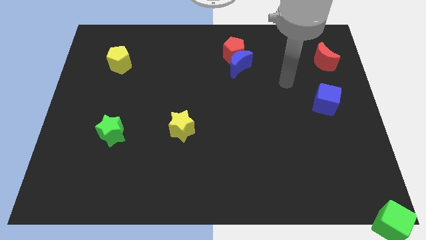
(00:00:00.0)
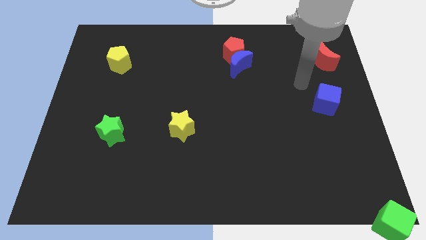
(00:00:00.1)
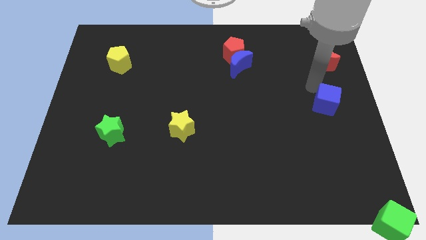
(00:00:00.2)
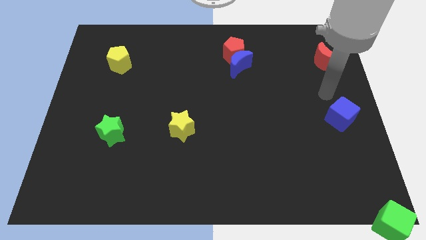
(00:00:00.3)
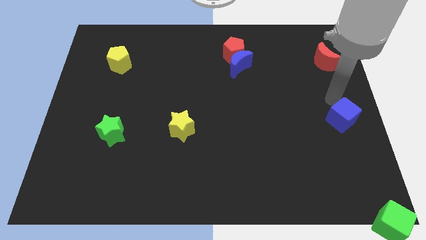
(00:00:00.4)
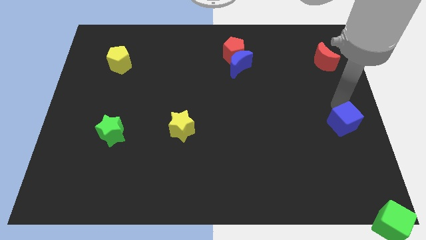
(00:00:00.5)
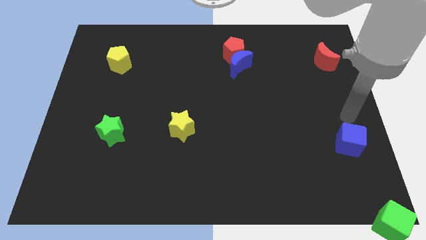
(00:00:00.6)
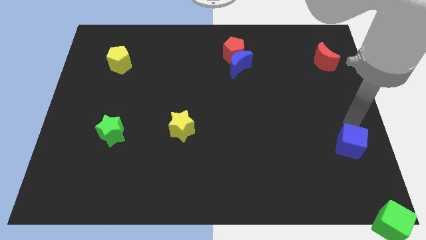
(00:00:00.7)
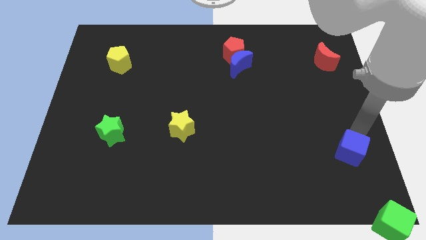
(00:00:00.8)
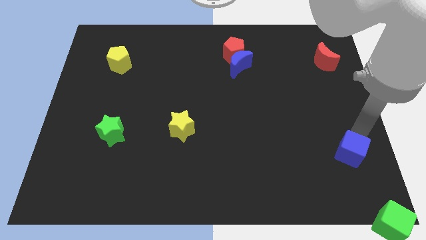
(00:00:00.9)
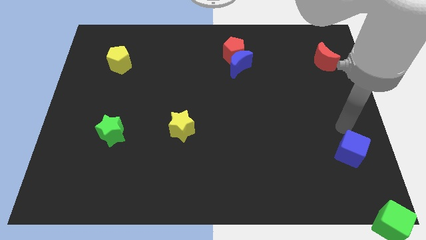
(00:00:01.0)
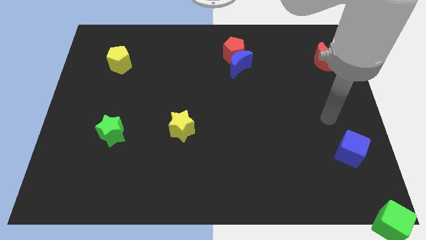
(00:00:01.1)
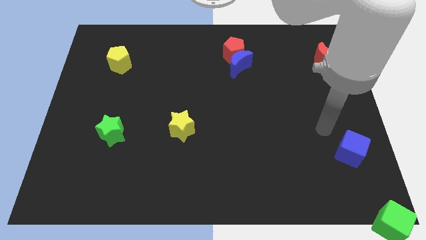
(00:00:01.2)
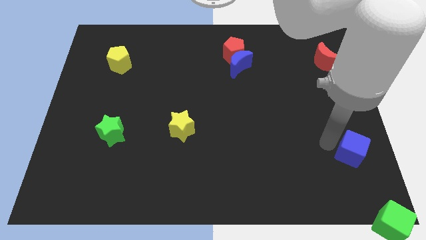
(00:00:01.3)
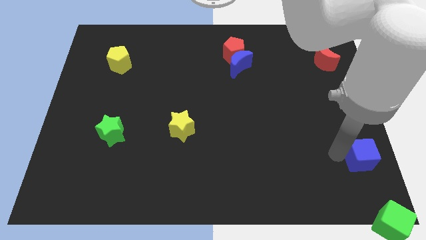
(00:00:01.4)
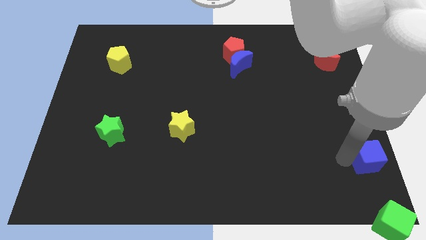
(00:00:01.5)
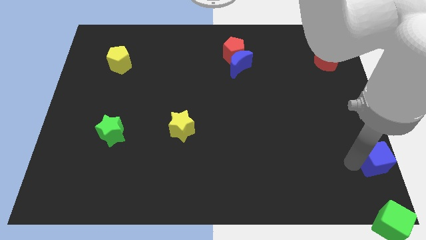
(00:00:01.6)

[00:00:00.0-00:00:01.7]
push the blue cube downward

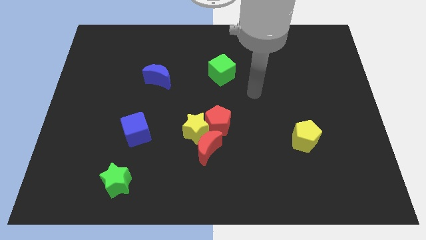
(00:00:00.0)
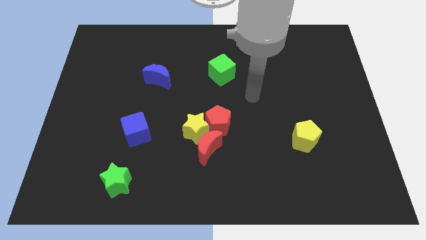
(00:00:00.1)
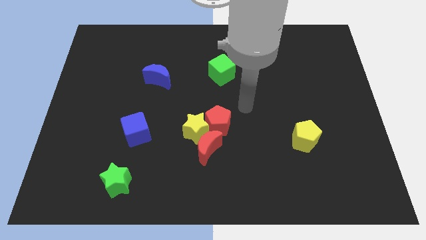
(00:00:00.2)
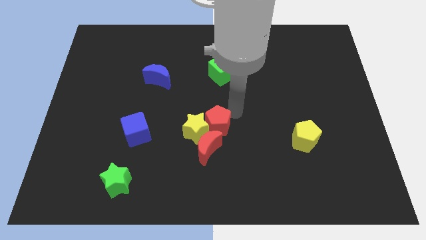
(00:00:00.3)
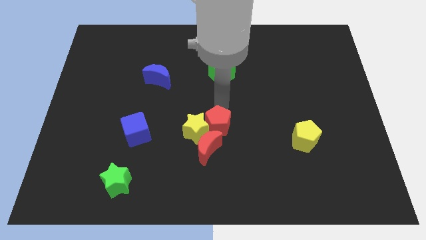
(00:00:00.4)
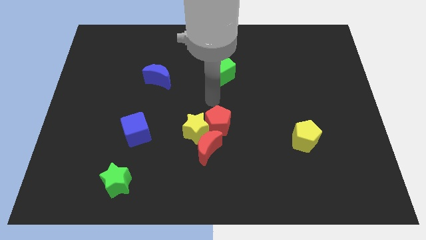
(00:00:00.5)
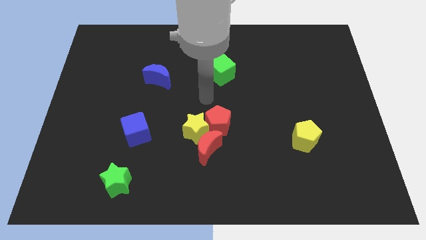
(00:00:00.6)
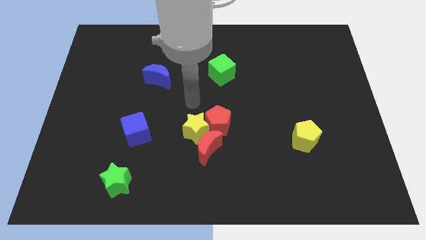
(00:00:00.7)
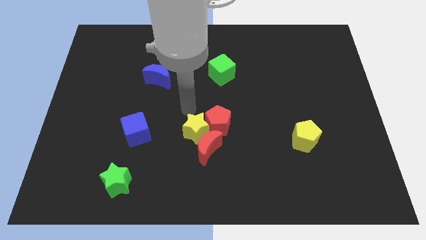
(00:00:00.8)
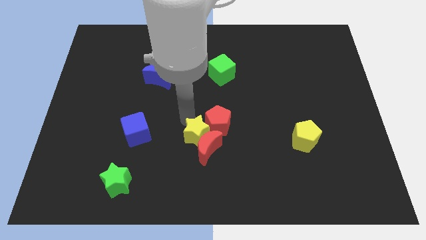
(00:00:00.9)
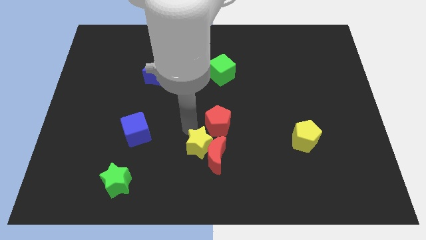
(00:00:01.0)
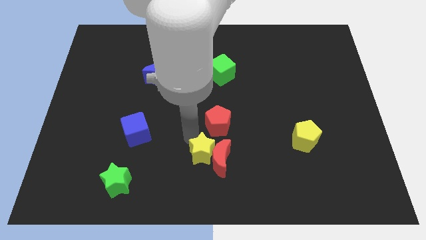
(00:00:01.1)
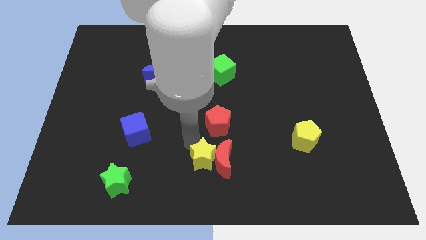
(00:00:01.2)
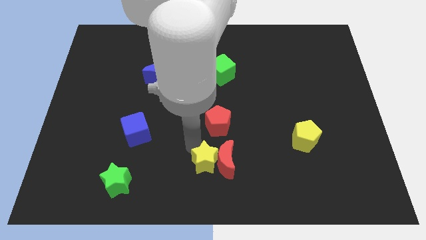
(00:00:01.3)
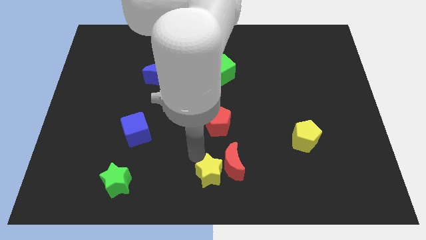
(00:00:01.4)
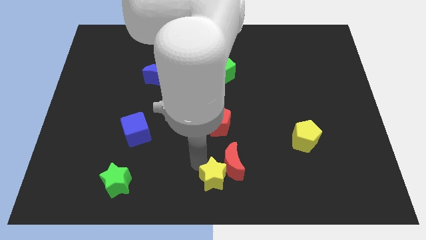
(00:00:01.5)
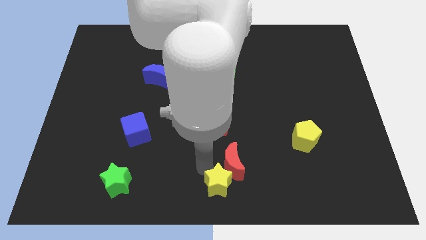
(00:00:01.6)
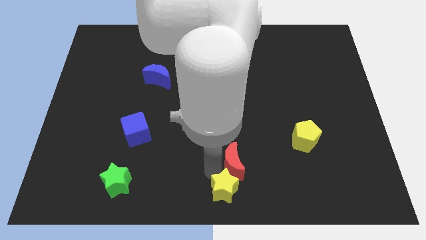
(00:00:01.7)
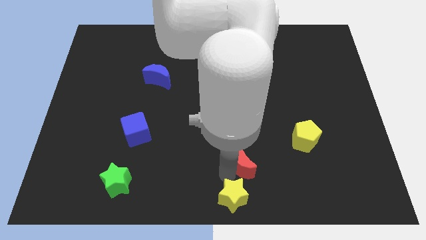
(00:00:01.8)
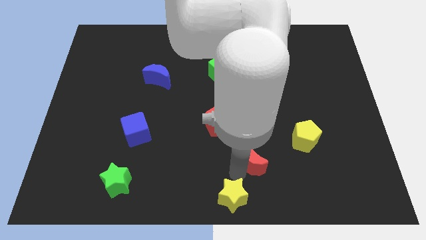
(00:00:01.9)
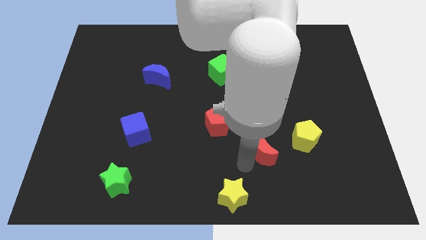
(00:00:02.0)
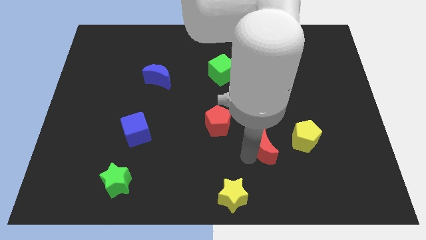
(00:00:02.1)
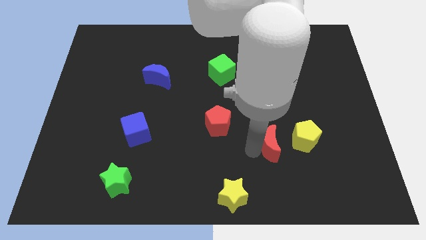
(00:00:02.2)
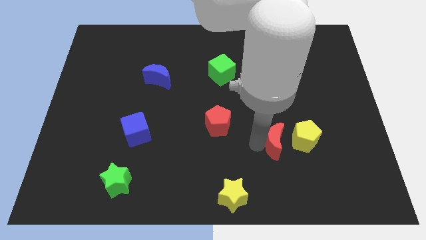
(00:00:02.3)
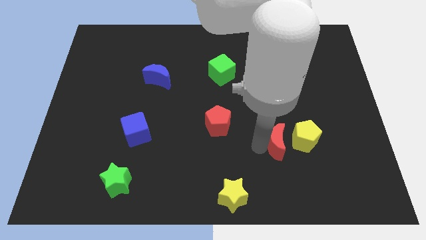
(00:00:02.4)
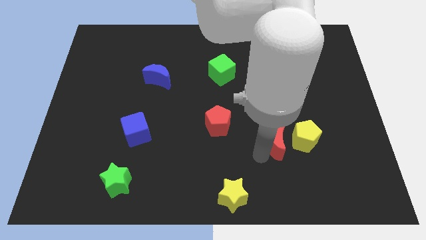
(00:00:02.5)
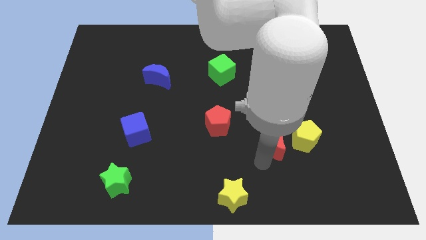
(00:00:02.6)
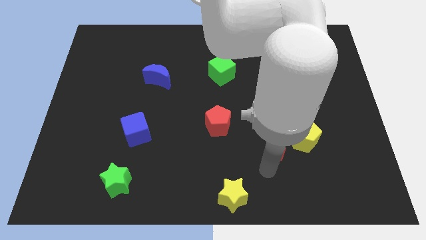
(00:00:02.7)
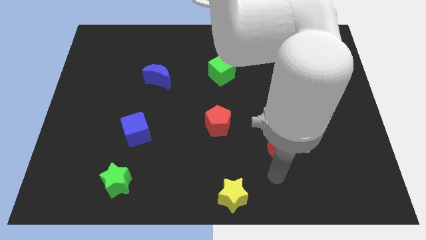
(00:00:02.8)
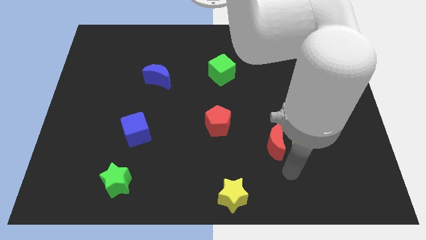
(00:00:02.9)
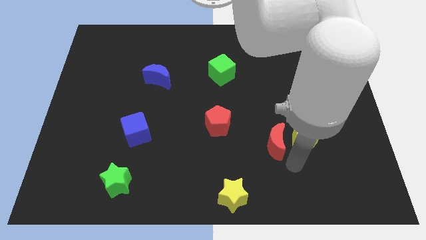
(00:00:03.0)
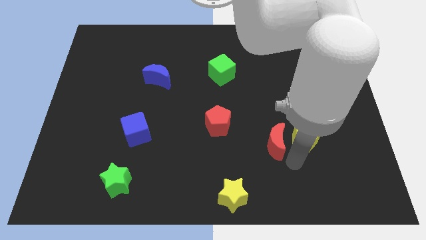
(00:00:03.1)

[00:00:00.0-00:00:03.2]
place the yellow star at the bottom center of the board

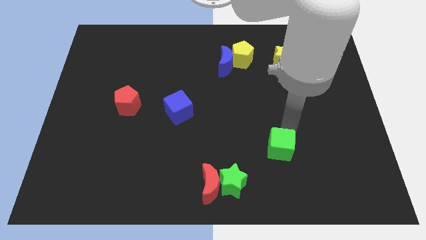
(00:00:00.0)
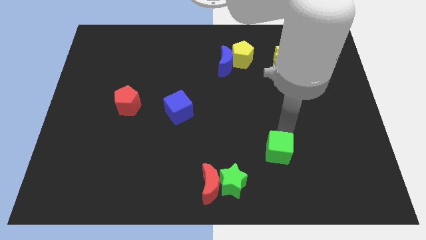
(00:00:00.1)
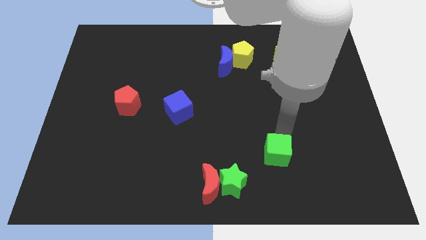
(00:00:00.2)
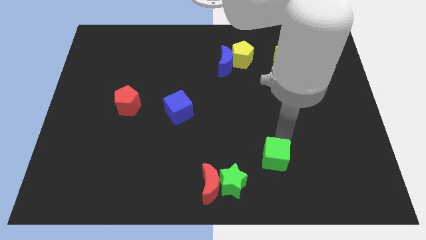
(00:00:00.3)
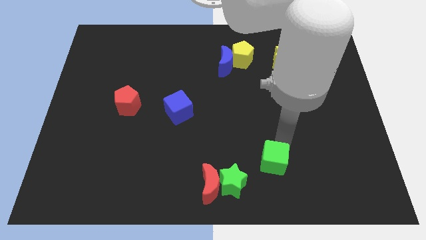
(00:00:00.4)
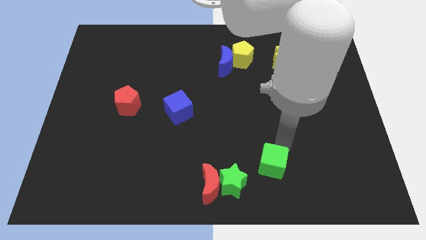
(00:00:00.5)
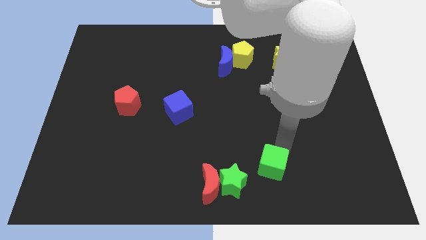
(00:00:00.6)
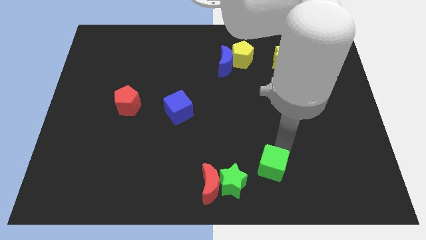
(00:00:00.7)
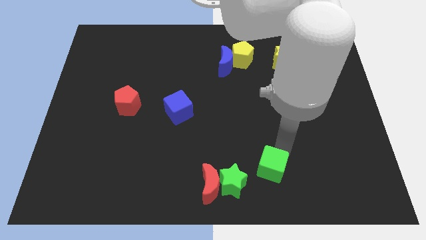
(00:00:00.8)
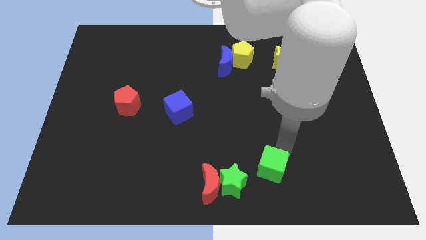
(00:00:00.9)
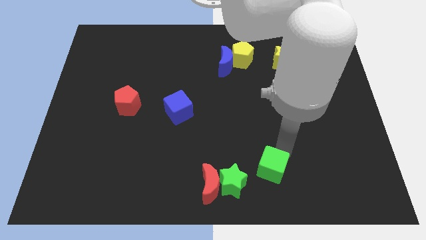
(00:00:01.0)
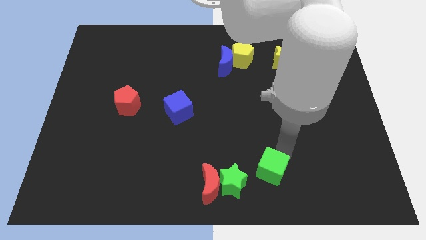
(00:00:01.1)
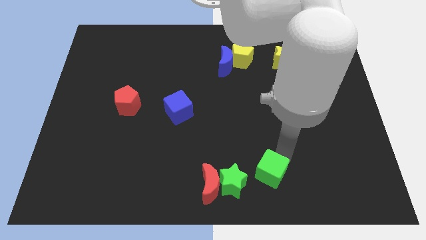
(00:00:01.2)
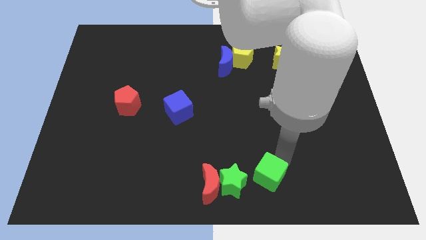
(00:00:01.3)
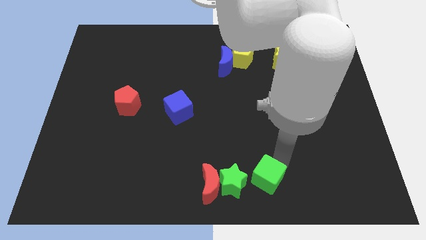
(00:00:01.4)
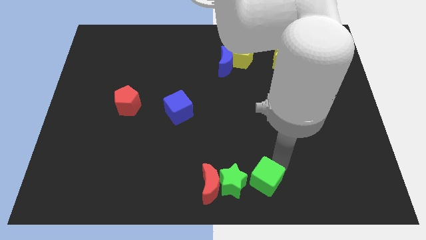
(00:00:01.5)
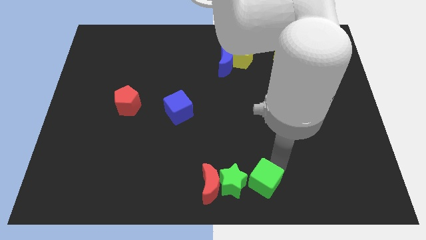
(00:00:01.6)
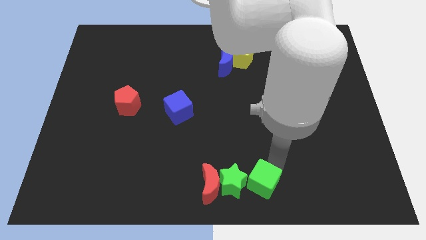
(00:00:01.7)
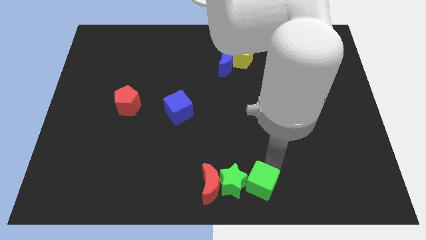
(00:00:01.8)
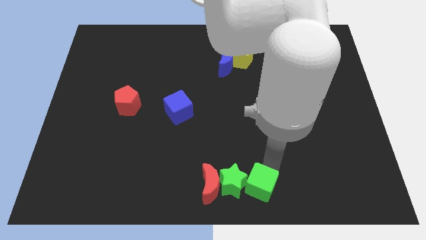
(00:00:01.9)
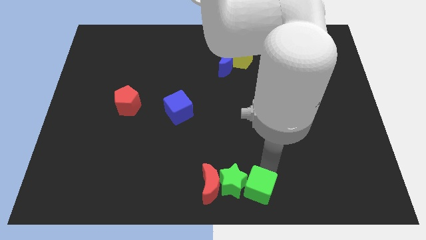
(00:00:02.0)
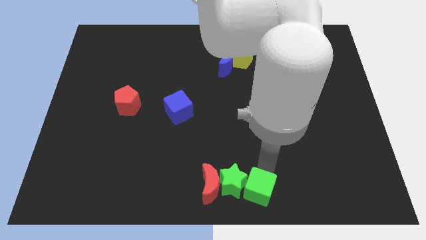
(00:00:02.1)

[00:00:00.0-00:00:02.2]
move the green cube to the right of the green star

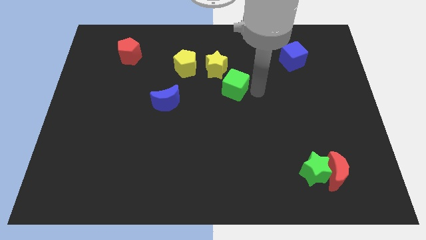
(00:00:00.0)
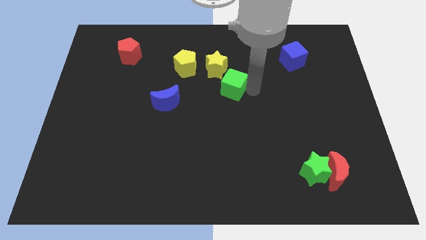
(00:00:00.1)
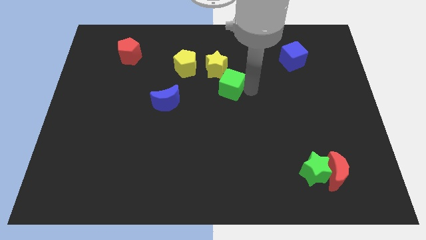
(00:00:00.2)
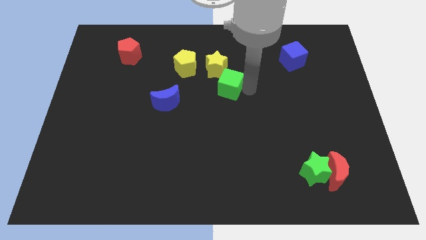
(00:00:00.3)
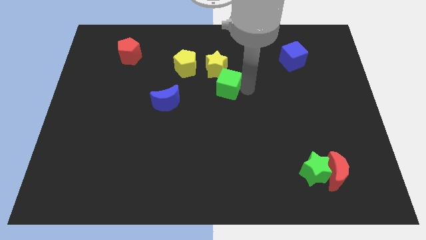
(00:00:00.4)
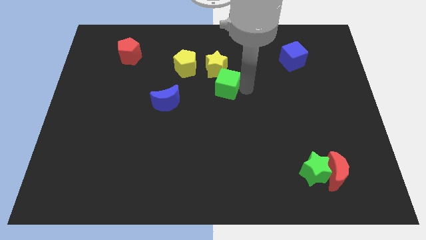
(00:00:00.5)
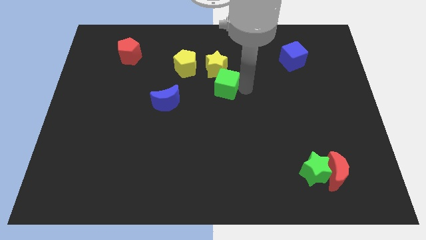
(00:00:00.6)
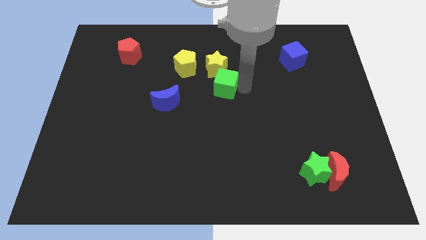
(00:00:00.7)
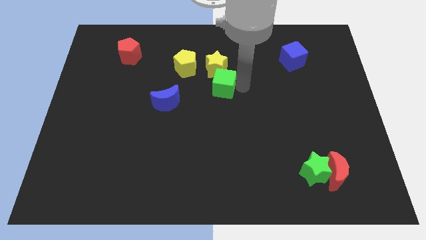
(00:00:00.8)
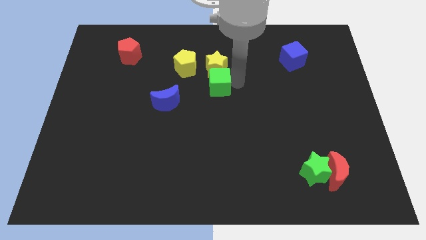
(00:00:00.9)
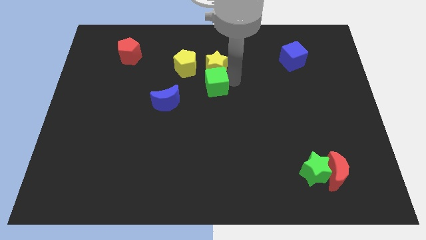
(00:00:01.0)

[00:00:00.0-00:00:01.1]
move green cube below yellow star

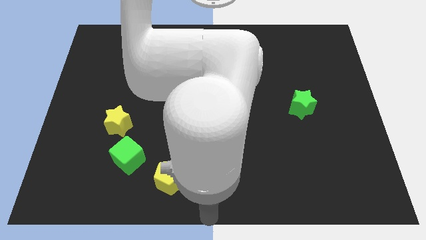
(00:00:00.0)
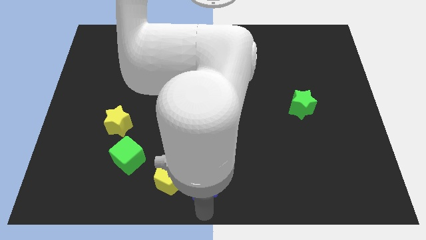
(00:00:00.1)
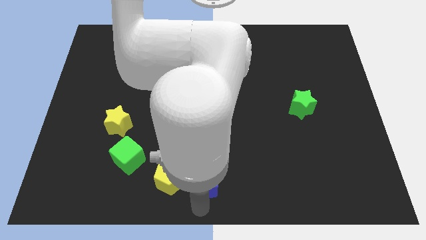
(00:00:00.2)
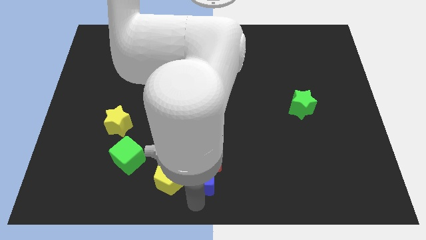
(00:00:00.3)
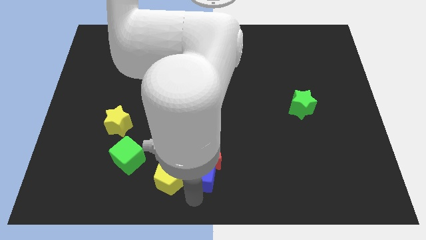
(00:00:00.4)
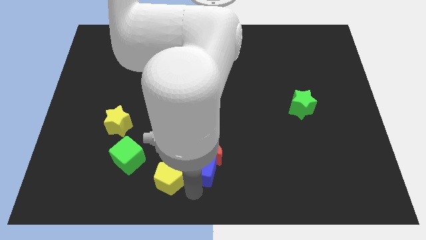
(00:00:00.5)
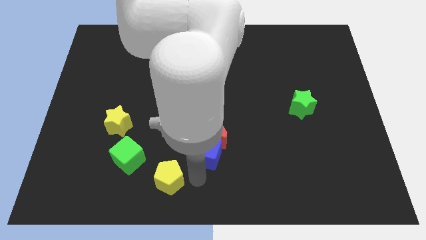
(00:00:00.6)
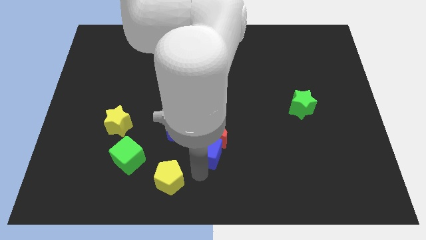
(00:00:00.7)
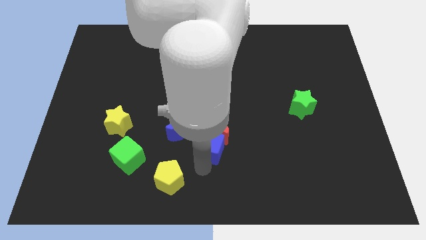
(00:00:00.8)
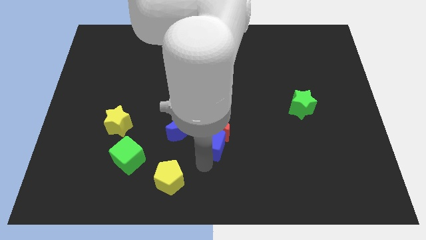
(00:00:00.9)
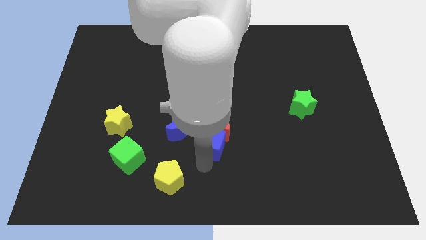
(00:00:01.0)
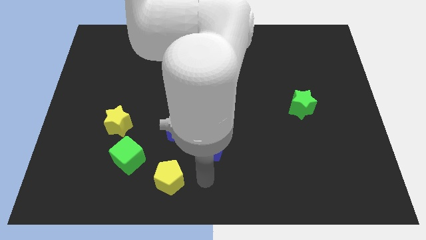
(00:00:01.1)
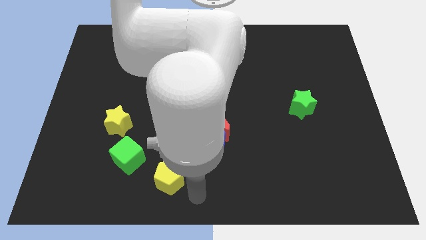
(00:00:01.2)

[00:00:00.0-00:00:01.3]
push the blue cube into the red moon
